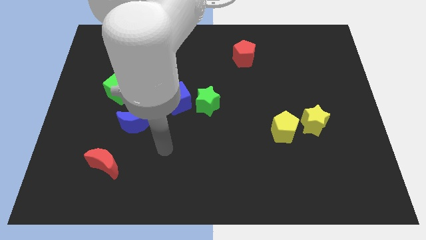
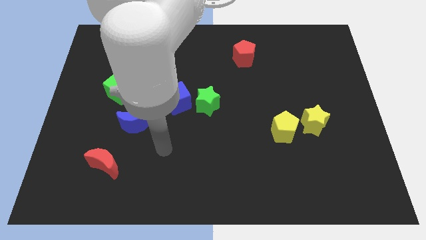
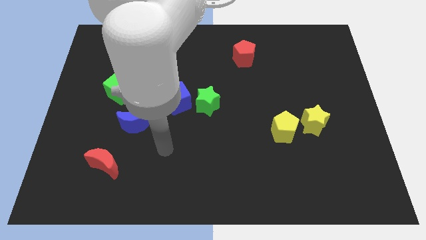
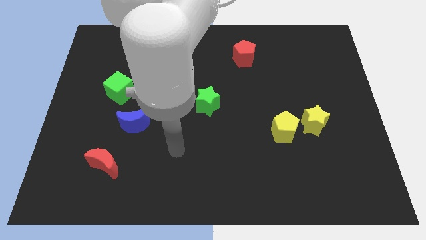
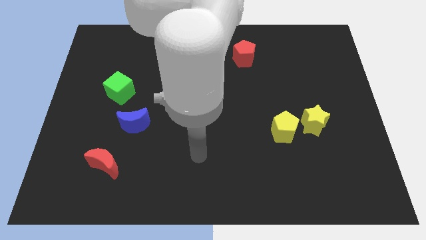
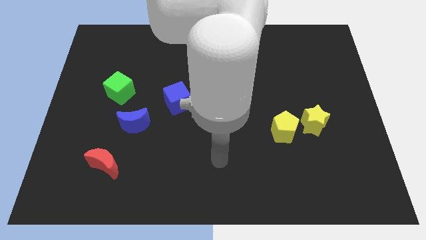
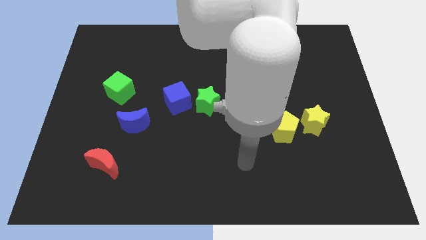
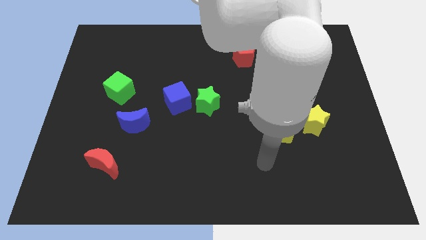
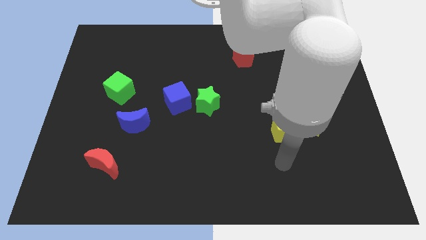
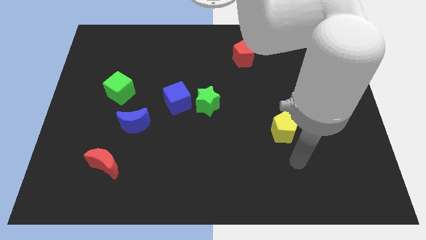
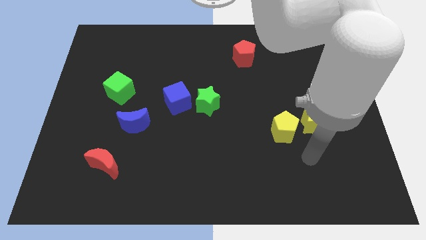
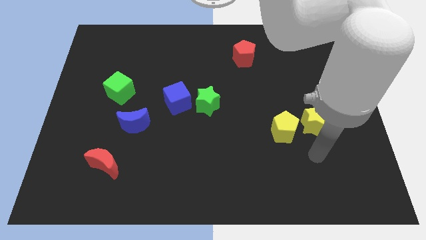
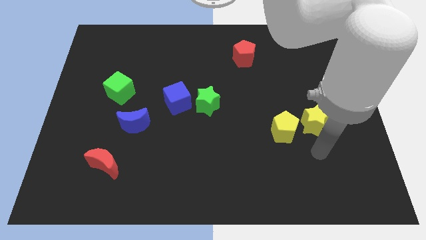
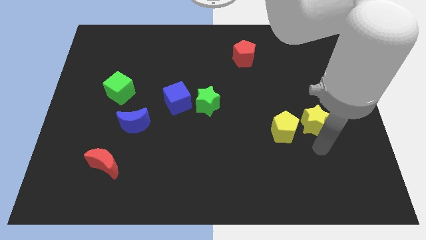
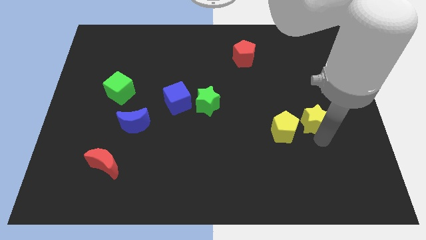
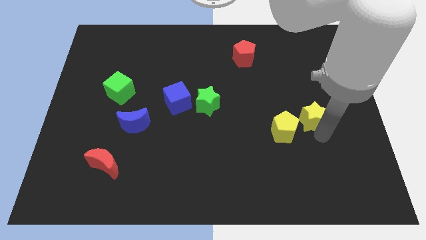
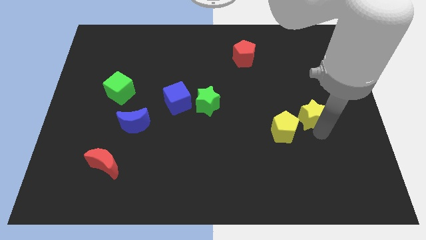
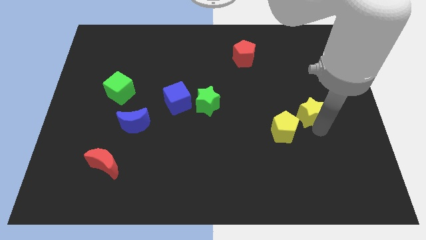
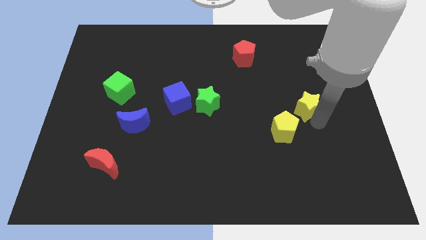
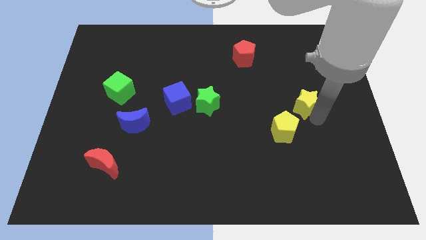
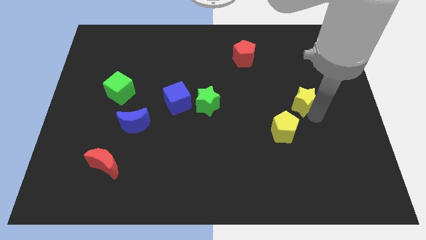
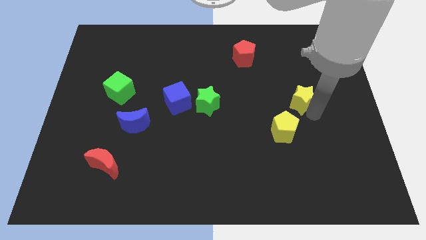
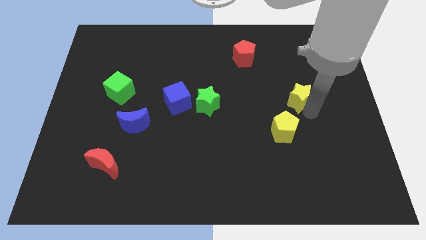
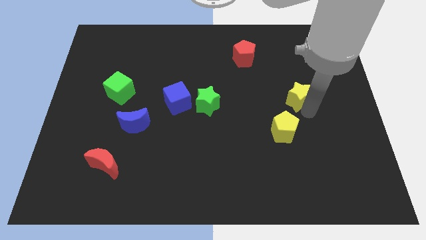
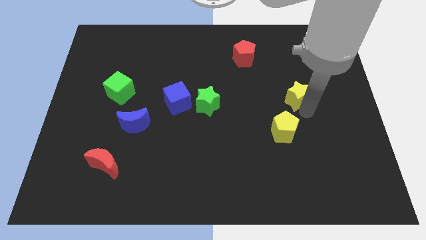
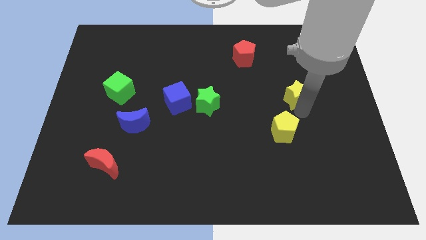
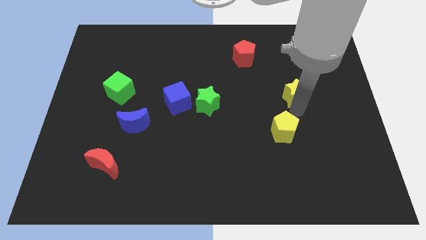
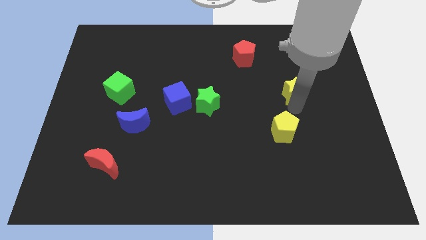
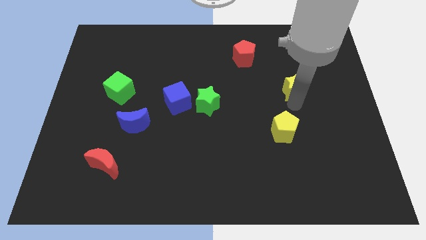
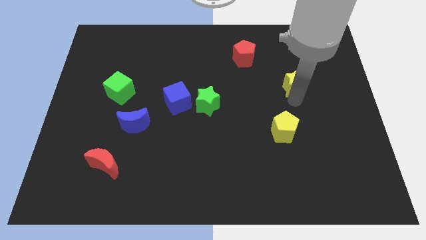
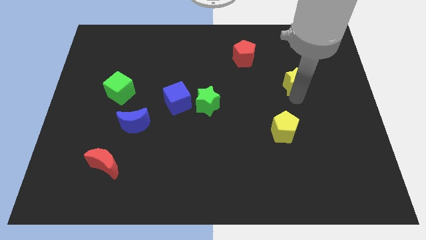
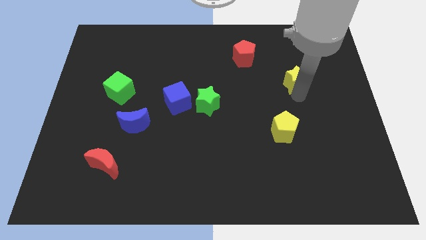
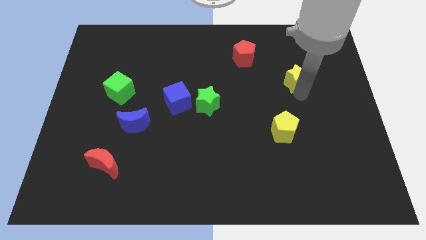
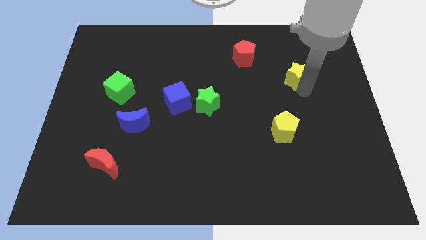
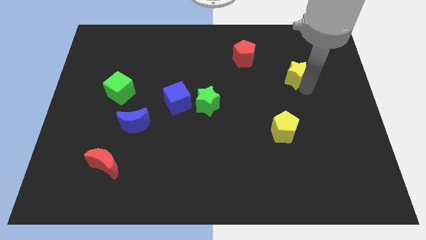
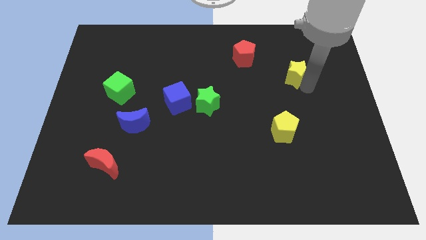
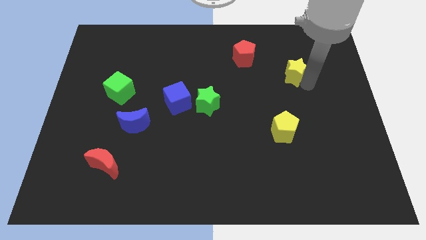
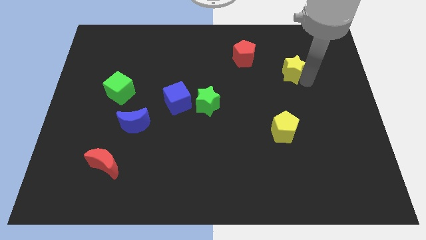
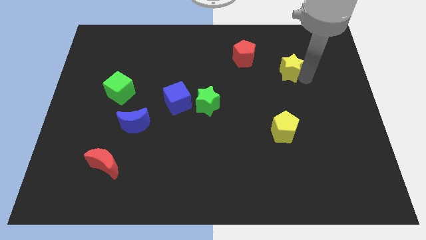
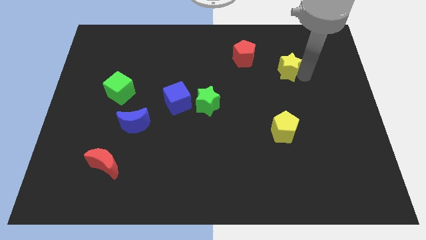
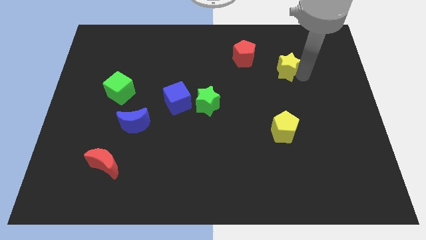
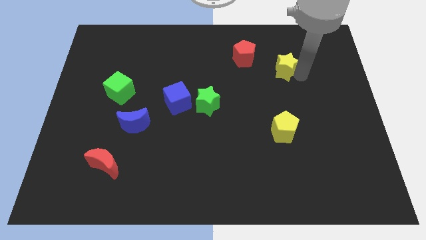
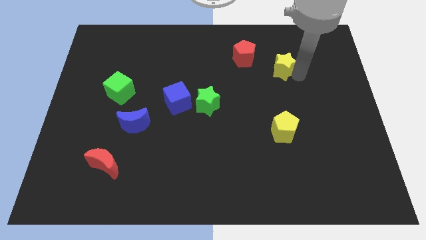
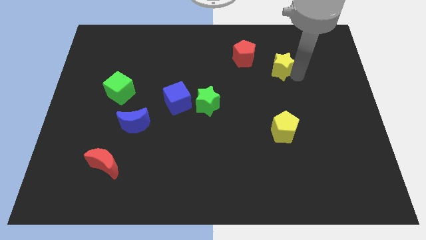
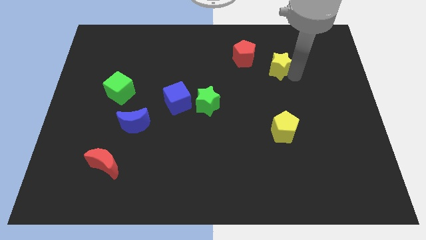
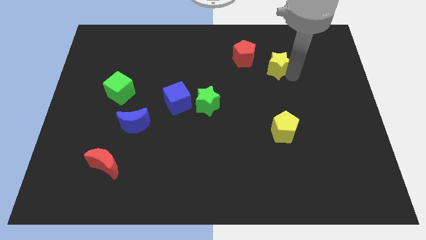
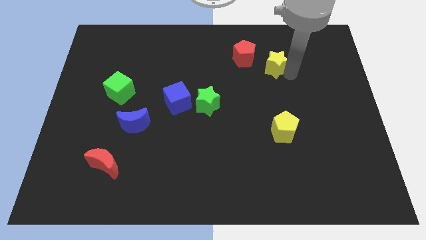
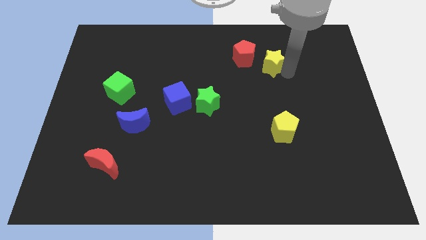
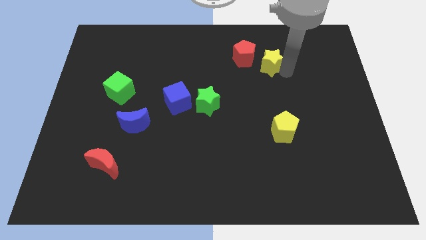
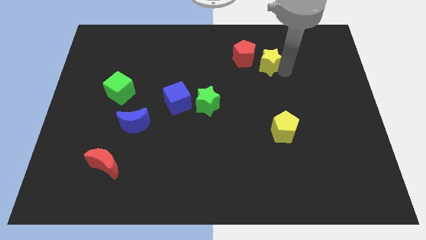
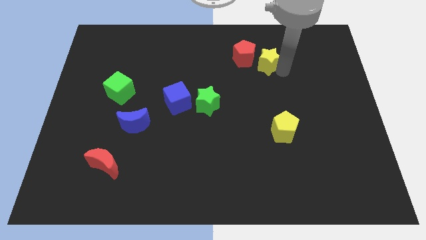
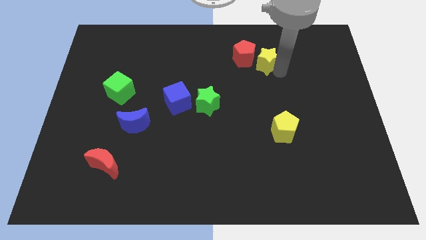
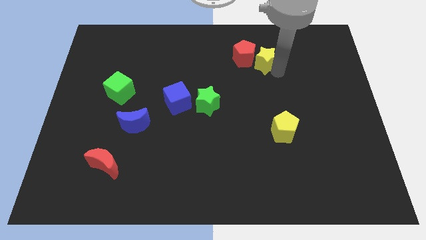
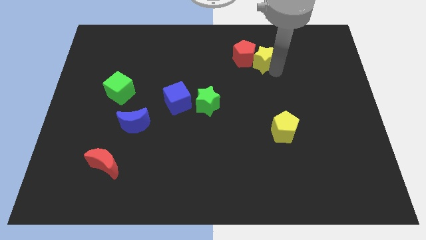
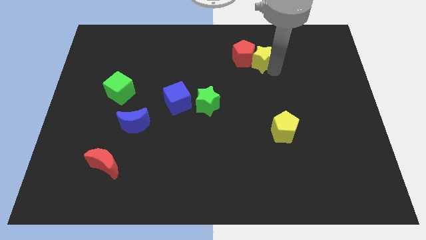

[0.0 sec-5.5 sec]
push the yellow star next to the red pentagon

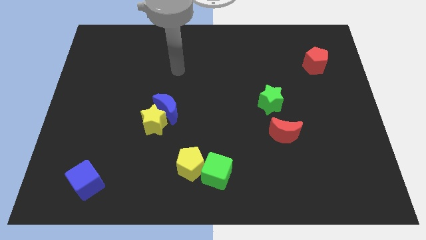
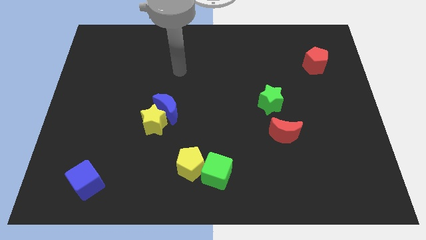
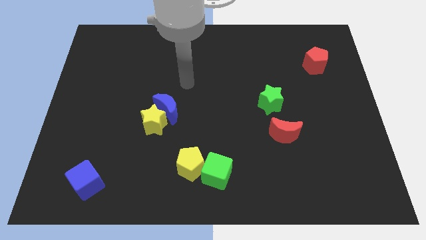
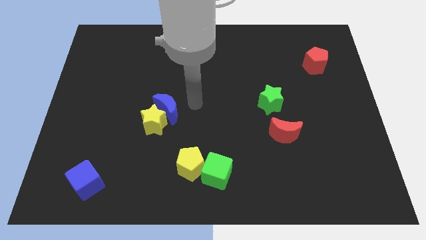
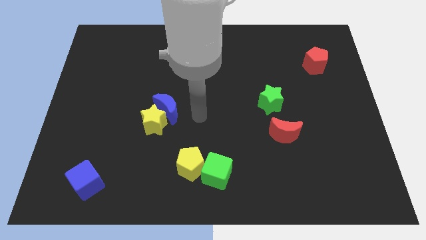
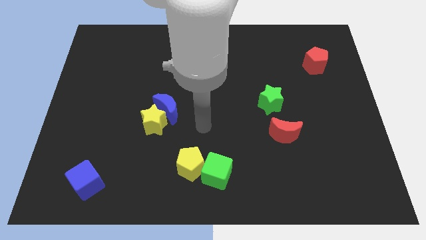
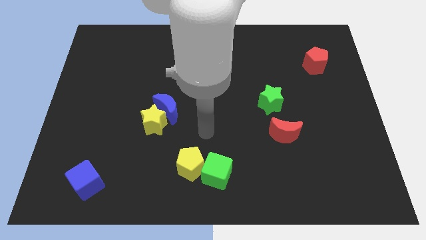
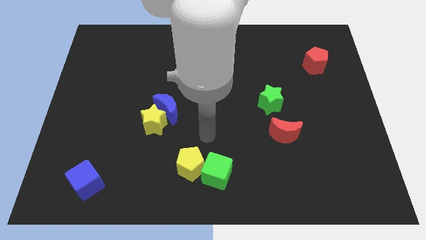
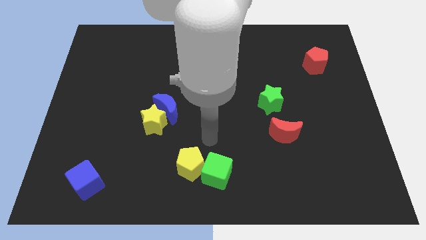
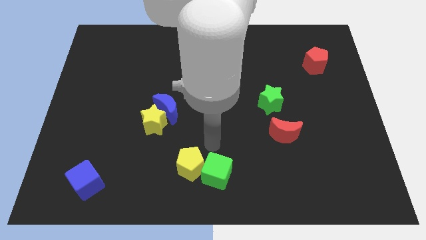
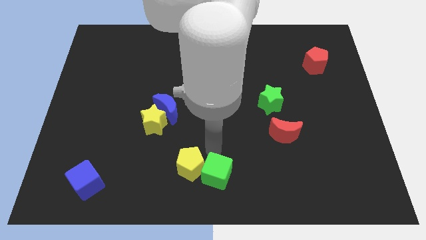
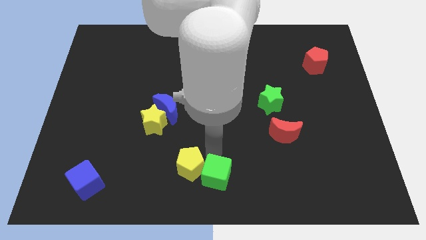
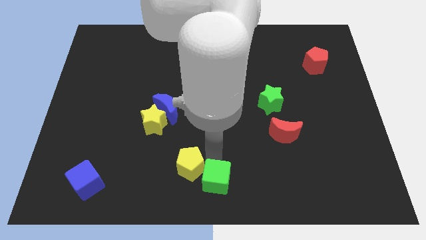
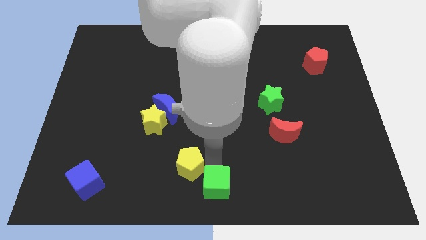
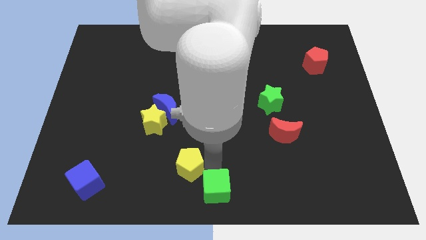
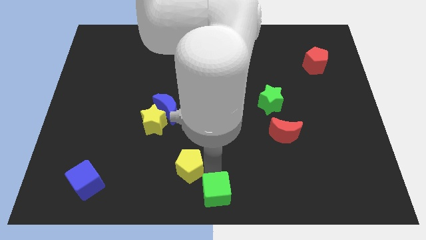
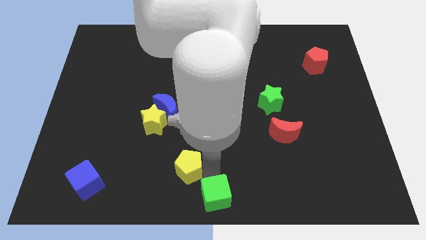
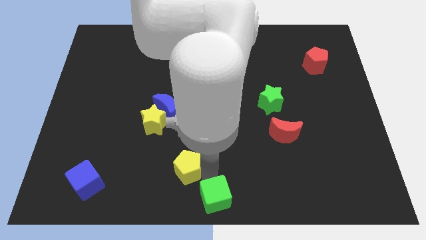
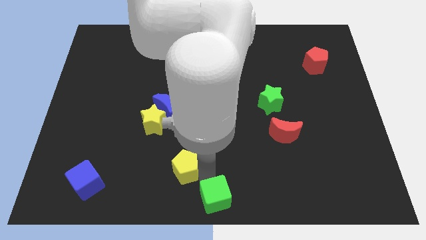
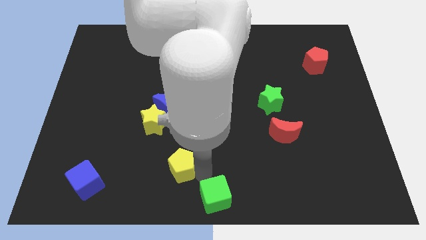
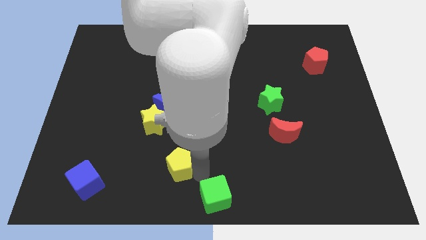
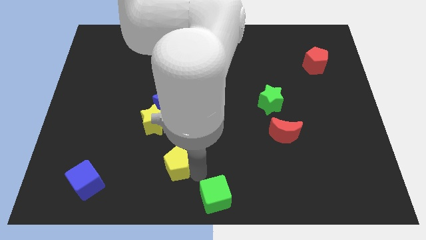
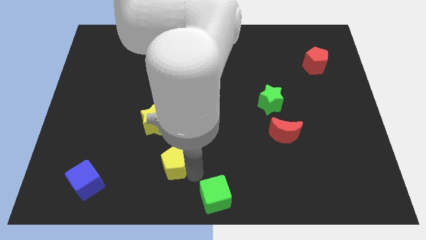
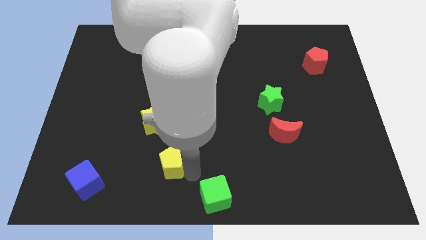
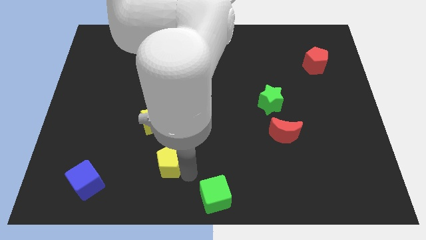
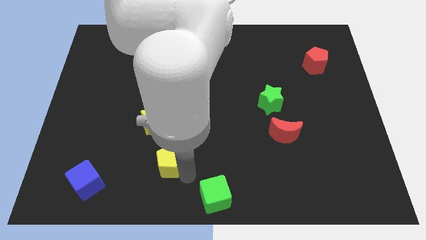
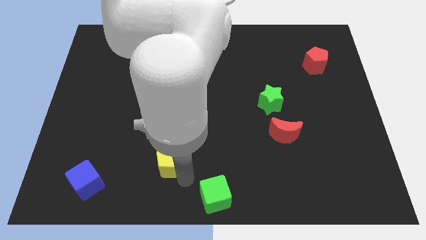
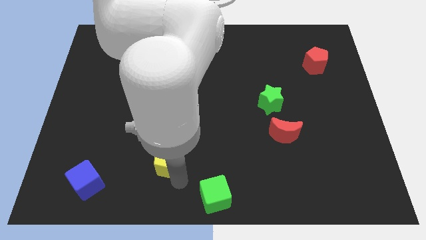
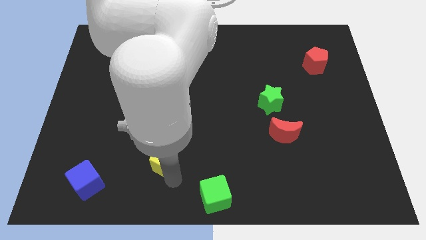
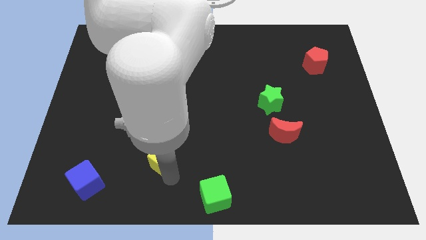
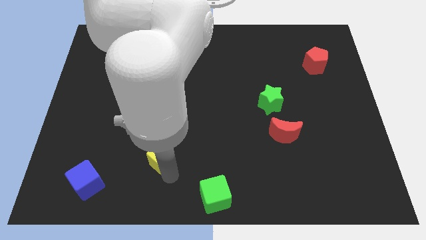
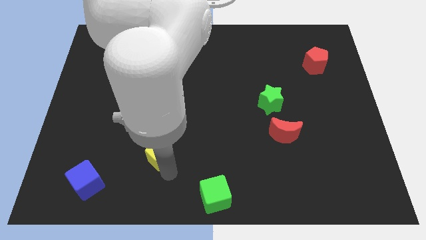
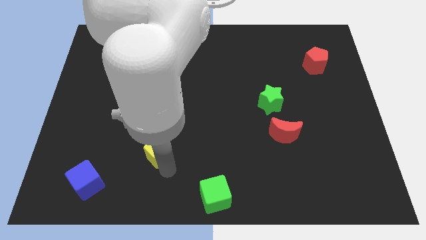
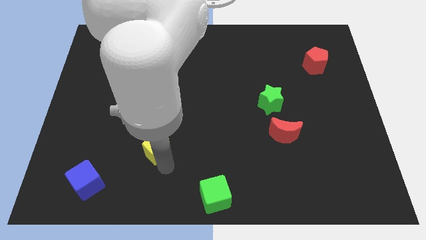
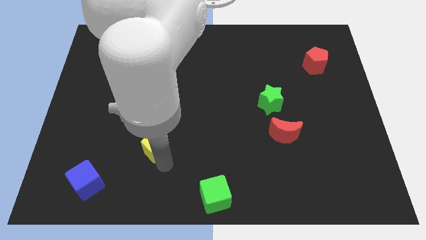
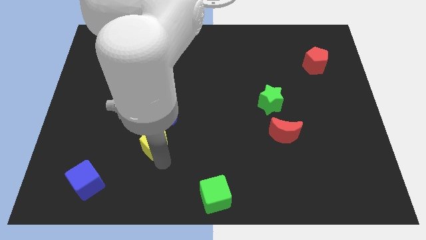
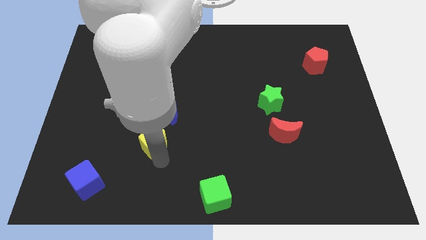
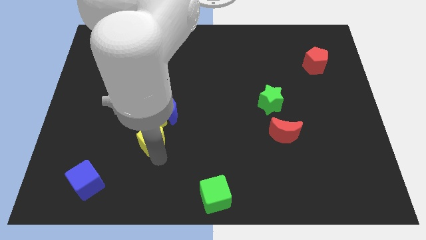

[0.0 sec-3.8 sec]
put the yellow pentagon towards the yellow star
